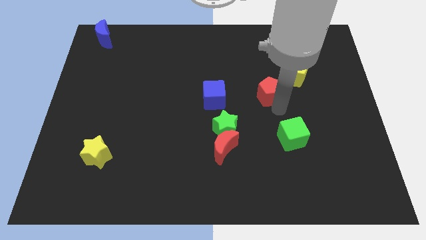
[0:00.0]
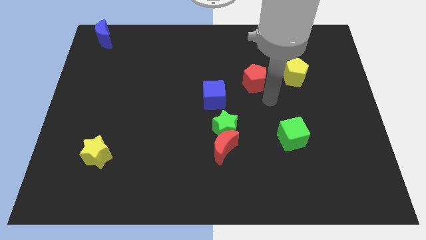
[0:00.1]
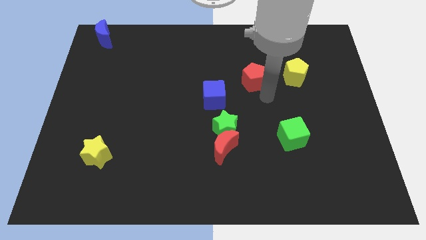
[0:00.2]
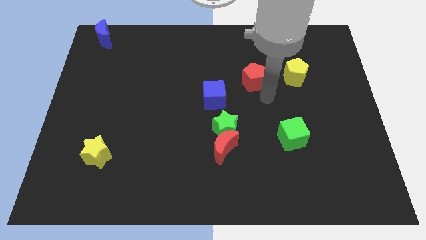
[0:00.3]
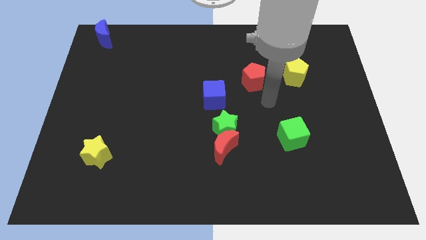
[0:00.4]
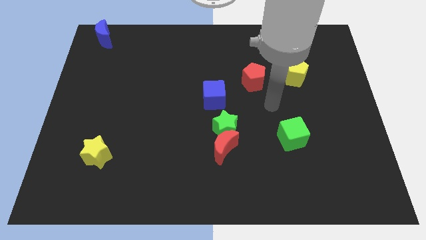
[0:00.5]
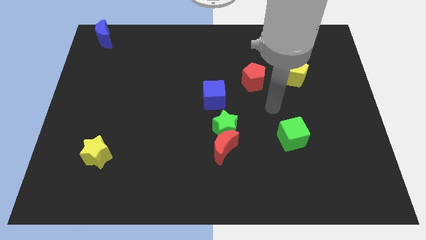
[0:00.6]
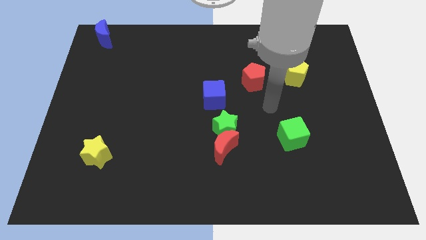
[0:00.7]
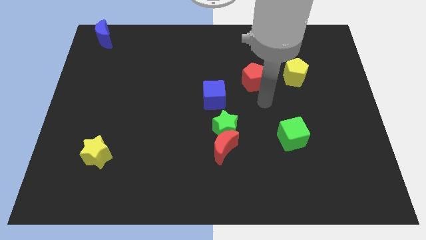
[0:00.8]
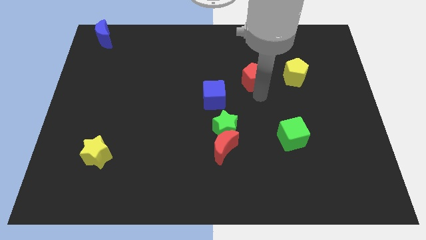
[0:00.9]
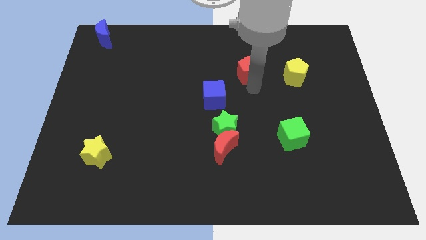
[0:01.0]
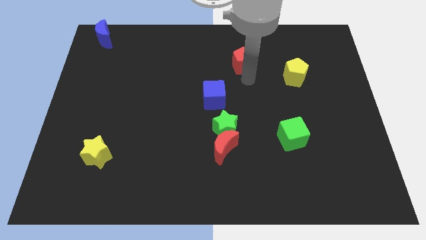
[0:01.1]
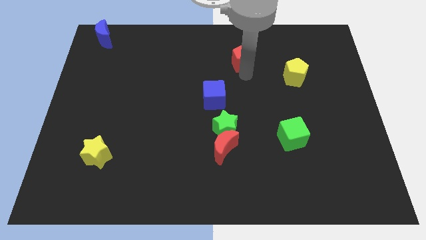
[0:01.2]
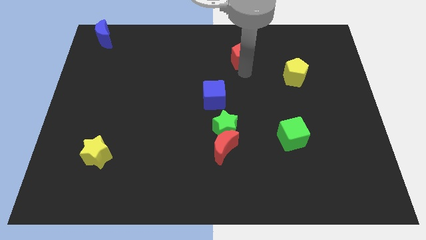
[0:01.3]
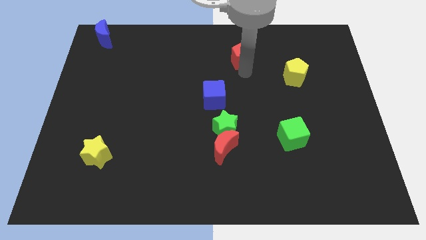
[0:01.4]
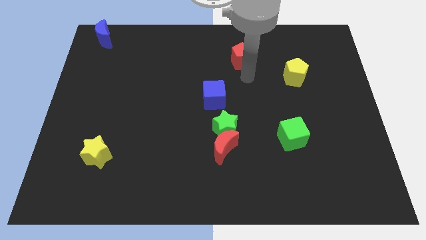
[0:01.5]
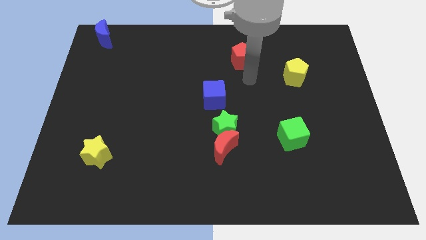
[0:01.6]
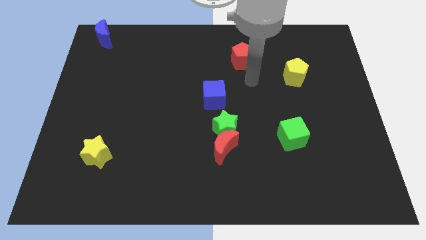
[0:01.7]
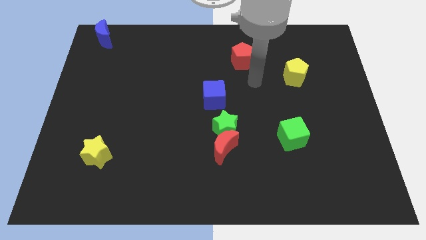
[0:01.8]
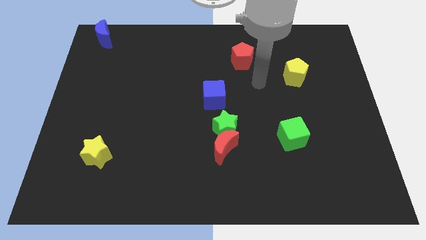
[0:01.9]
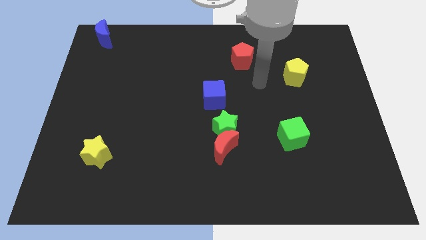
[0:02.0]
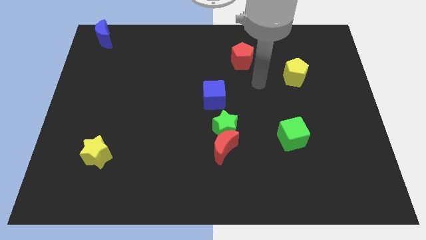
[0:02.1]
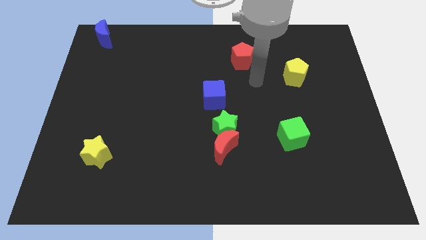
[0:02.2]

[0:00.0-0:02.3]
slide the red pentagon towards up

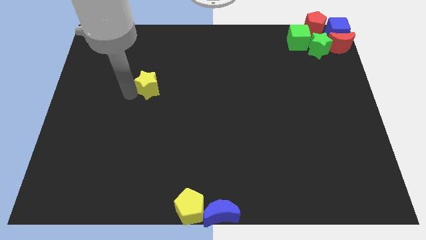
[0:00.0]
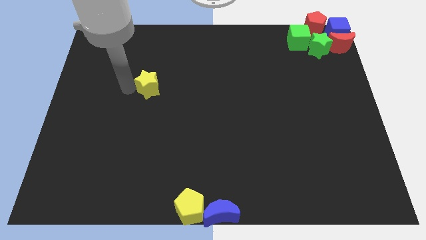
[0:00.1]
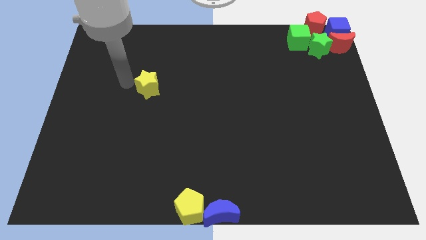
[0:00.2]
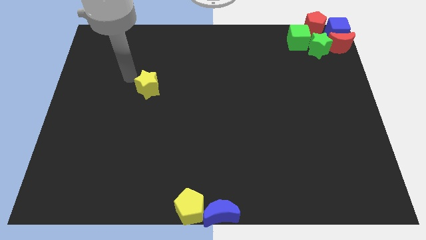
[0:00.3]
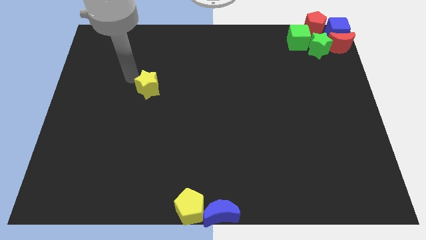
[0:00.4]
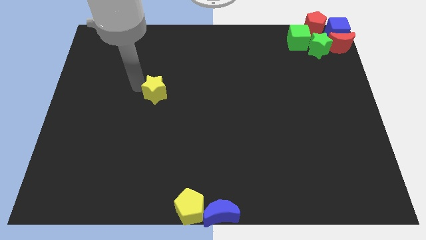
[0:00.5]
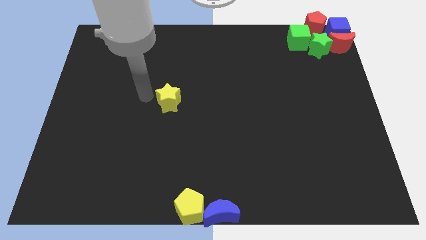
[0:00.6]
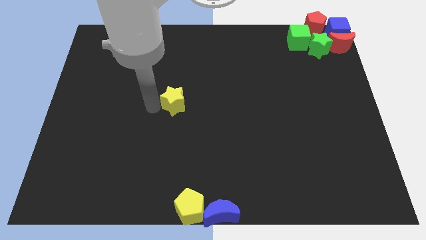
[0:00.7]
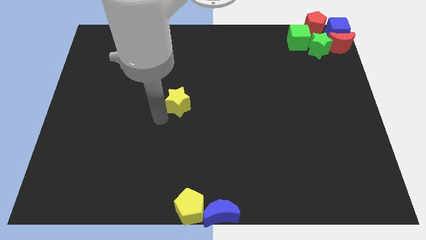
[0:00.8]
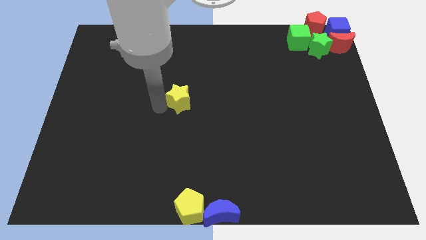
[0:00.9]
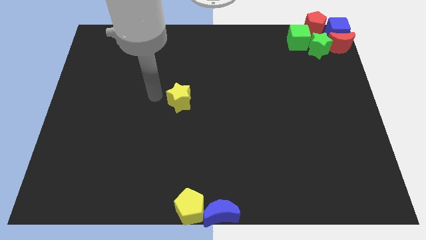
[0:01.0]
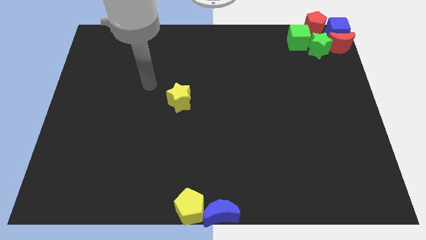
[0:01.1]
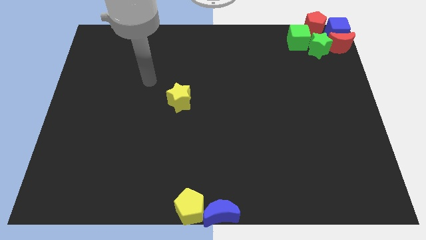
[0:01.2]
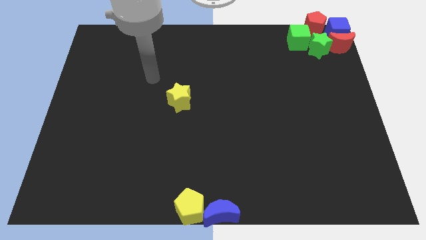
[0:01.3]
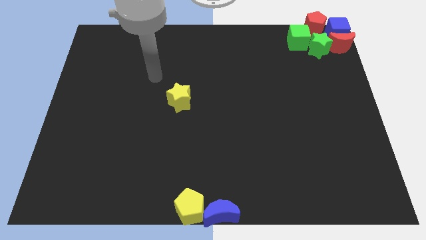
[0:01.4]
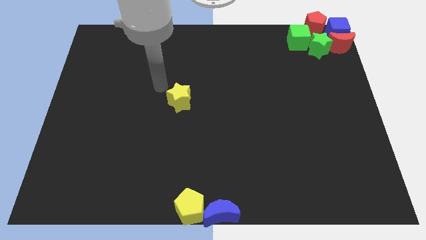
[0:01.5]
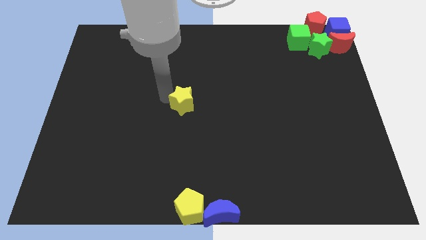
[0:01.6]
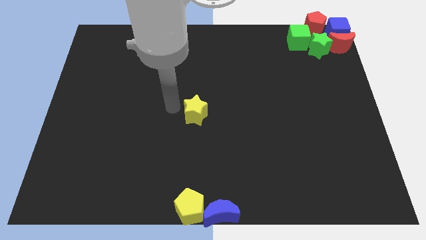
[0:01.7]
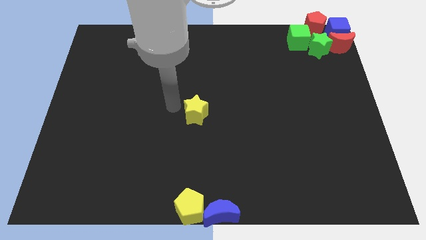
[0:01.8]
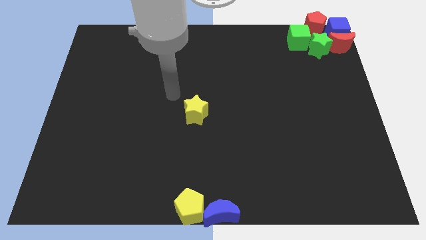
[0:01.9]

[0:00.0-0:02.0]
move the yellow star to the middle of the board

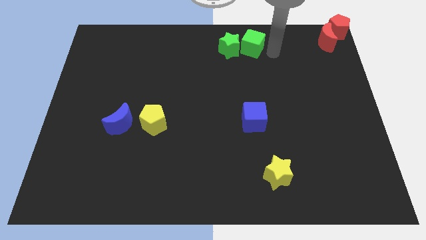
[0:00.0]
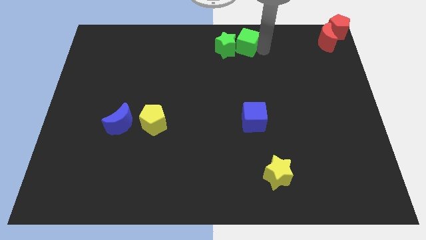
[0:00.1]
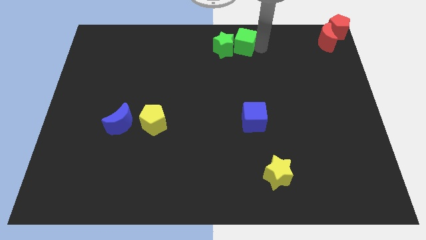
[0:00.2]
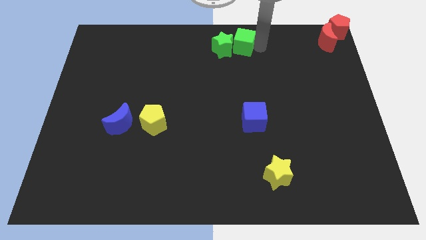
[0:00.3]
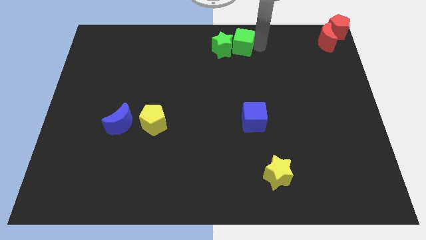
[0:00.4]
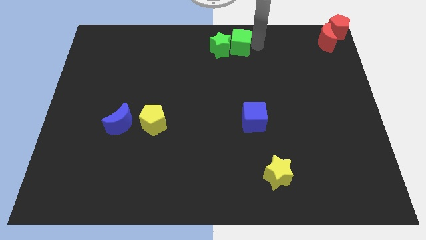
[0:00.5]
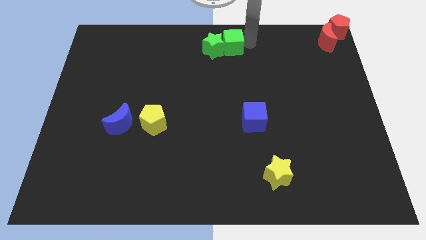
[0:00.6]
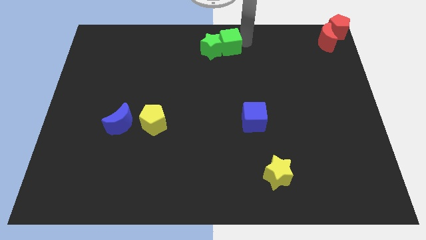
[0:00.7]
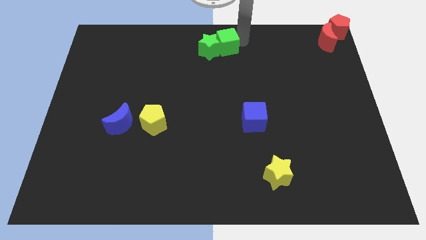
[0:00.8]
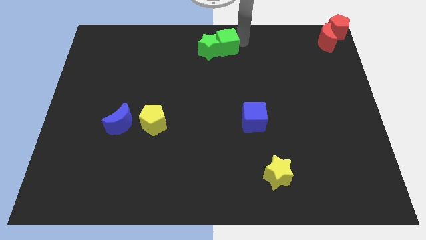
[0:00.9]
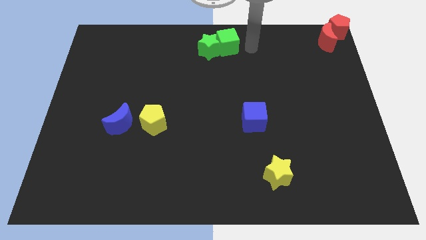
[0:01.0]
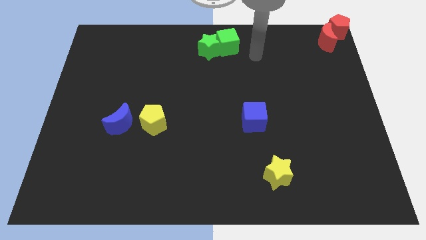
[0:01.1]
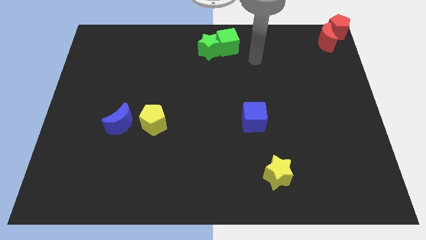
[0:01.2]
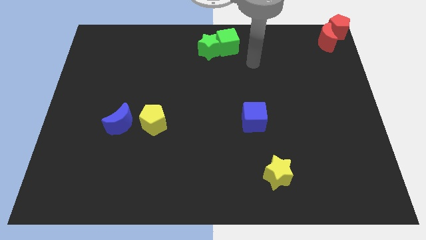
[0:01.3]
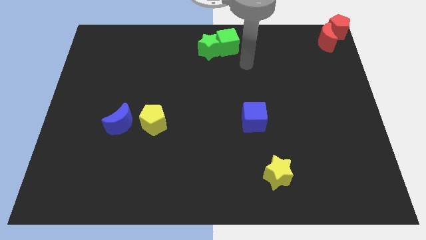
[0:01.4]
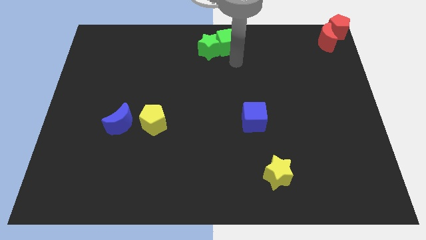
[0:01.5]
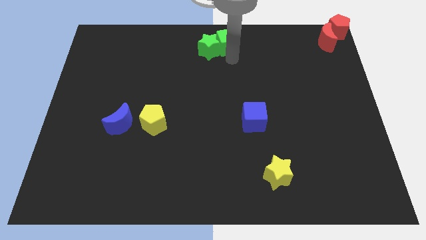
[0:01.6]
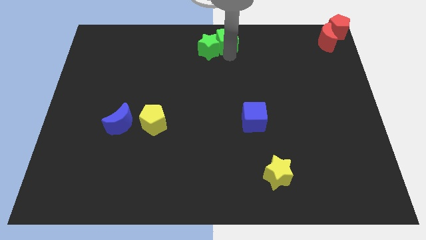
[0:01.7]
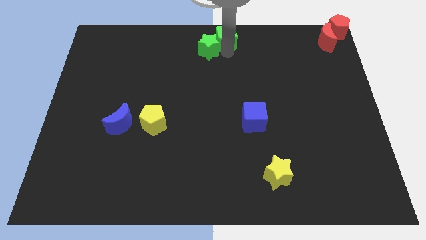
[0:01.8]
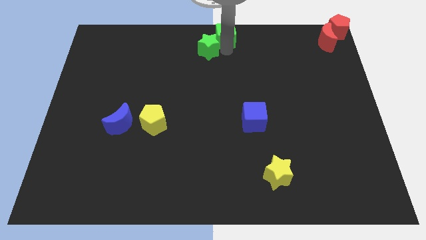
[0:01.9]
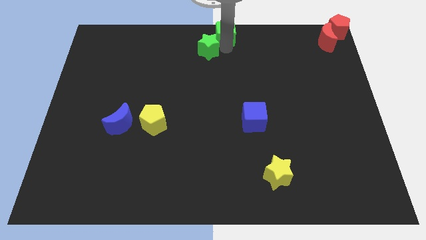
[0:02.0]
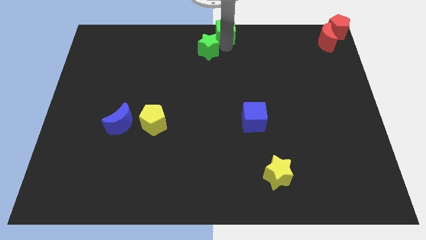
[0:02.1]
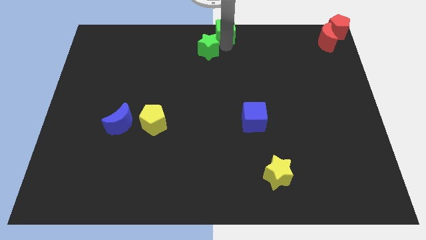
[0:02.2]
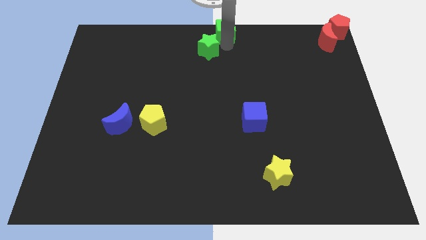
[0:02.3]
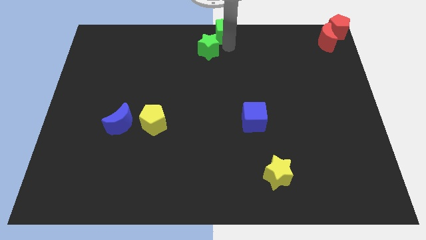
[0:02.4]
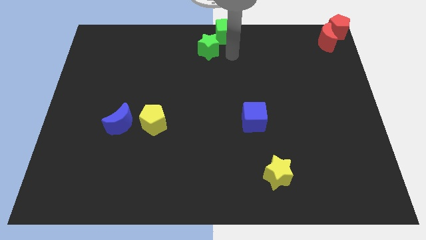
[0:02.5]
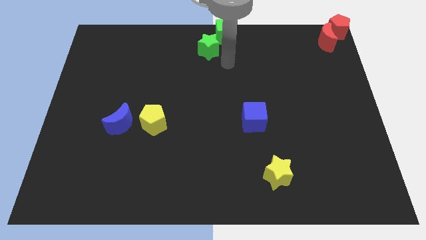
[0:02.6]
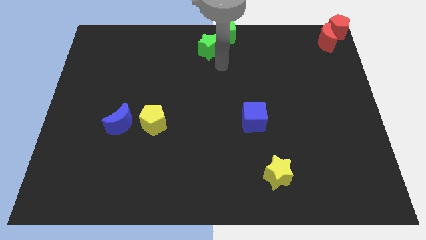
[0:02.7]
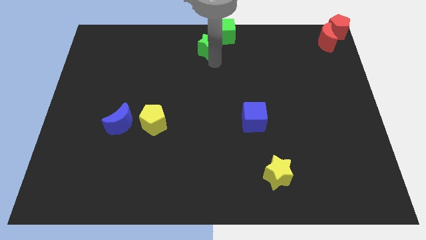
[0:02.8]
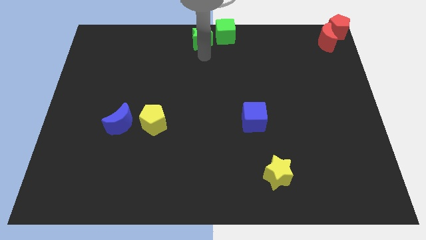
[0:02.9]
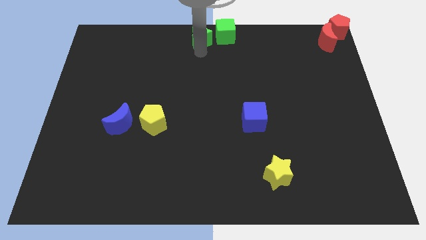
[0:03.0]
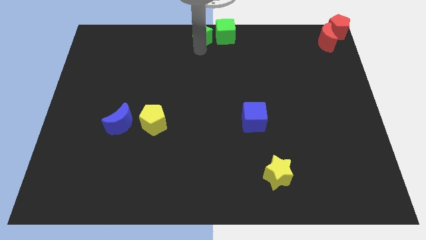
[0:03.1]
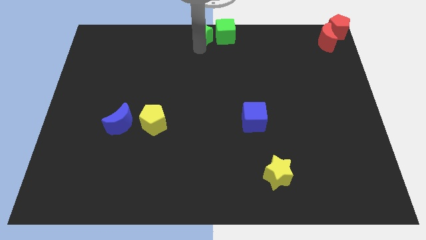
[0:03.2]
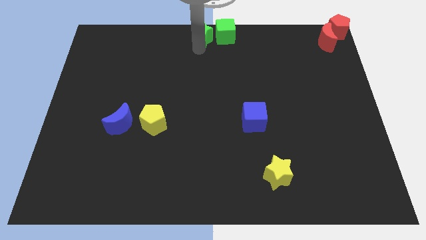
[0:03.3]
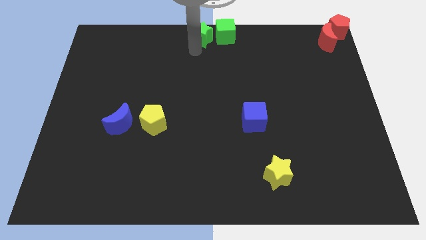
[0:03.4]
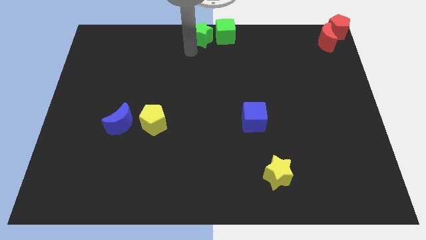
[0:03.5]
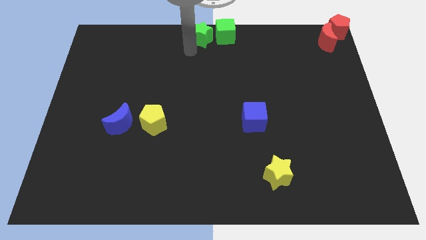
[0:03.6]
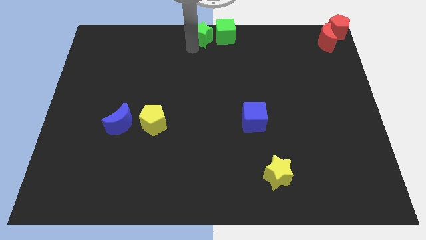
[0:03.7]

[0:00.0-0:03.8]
move green blocks to the center top

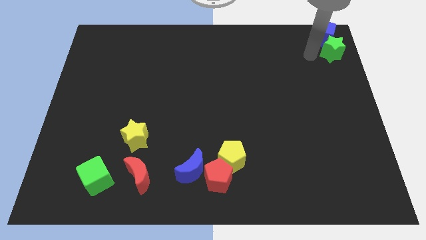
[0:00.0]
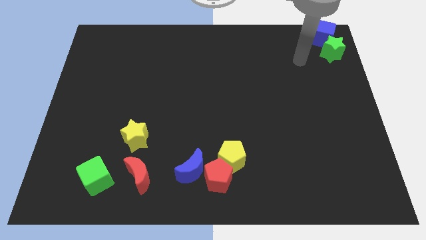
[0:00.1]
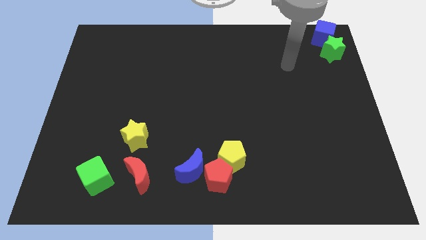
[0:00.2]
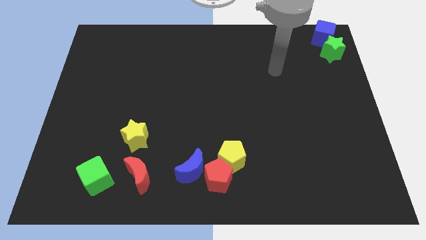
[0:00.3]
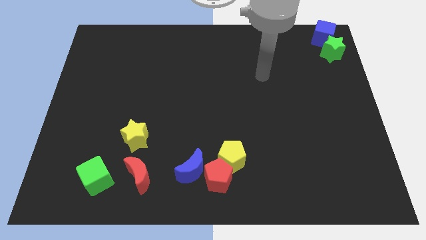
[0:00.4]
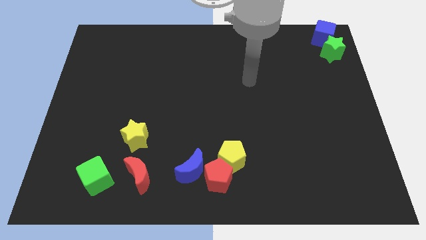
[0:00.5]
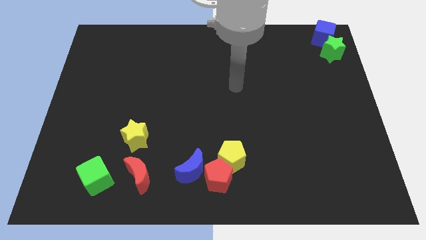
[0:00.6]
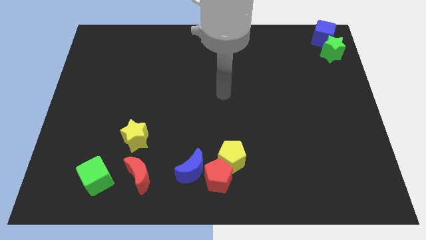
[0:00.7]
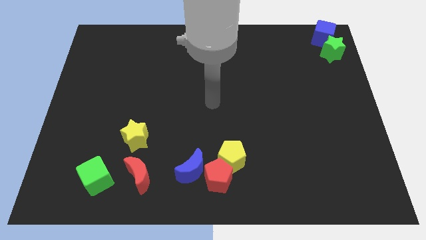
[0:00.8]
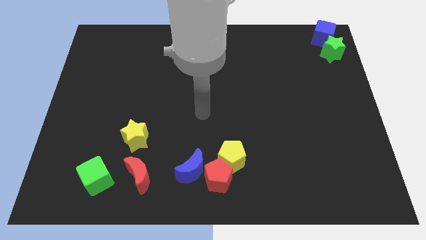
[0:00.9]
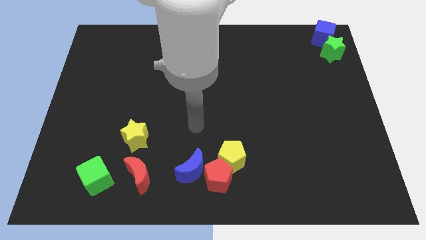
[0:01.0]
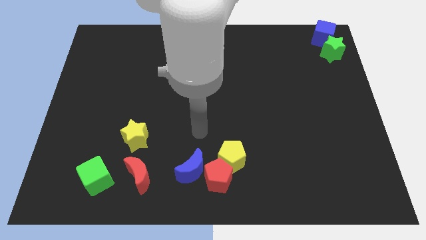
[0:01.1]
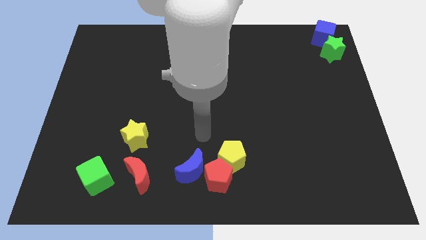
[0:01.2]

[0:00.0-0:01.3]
move the arm away from the green star
